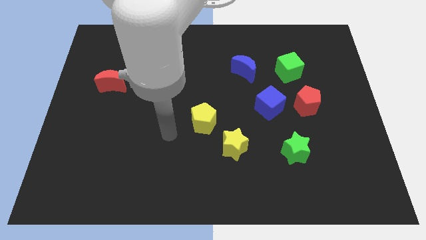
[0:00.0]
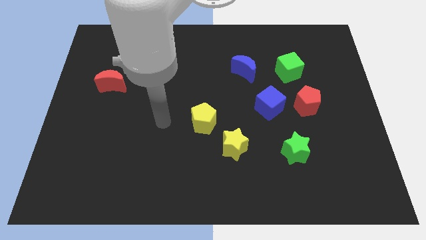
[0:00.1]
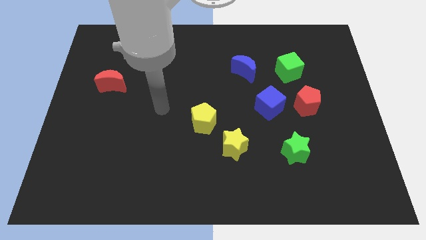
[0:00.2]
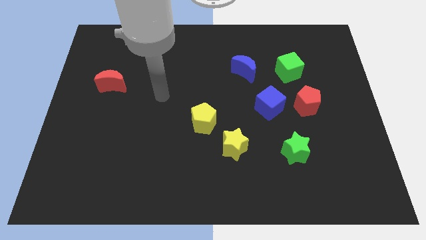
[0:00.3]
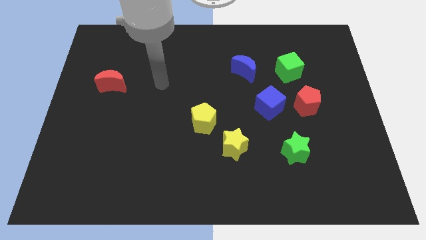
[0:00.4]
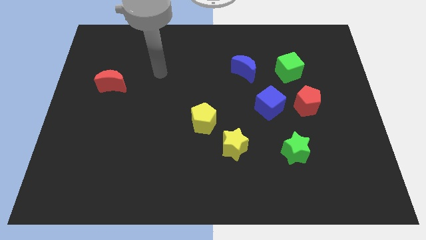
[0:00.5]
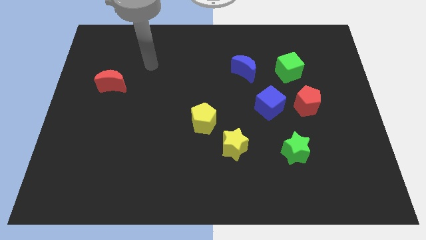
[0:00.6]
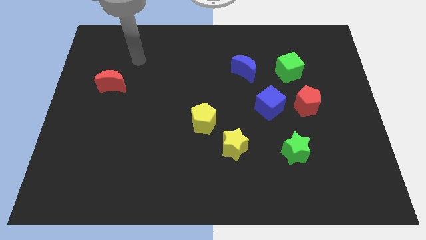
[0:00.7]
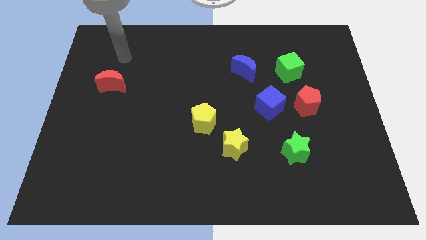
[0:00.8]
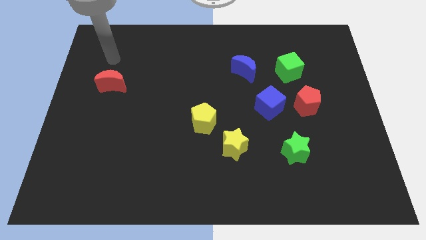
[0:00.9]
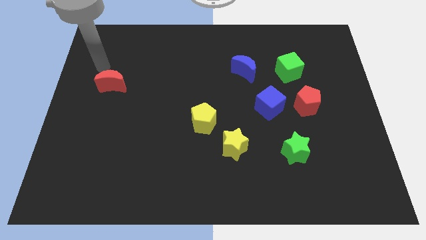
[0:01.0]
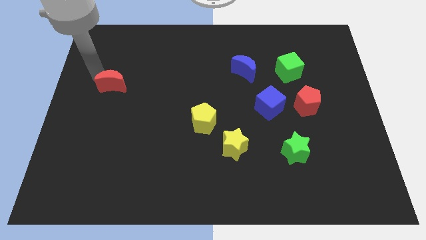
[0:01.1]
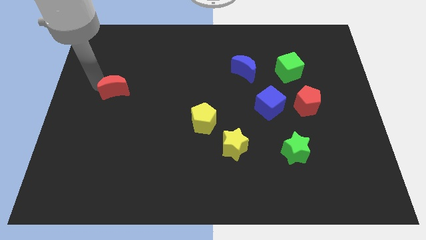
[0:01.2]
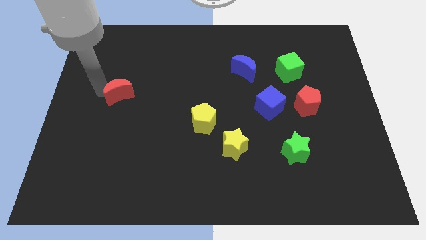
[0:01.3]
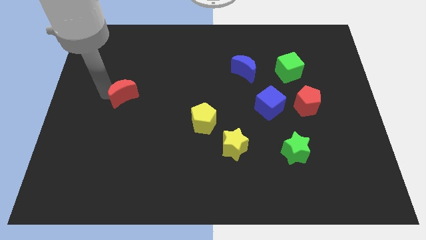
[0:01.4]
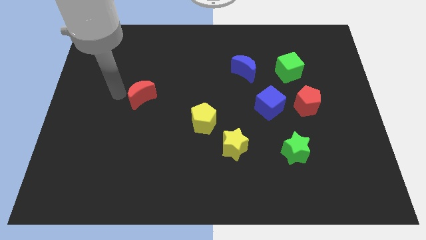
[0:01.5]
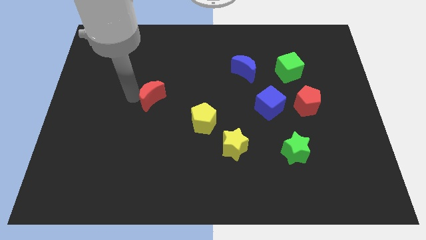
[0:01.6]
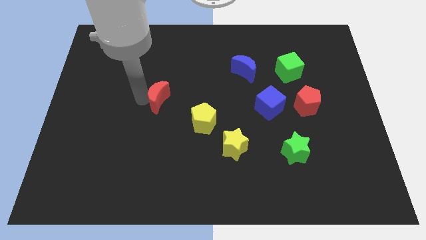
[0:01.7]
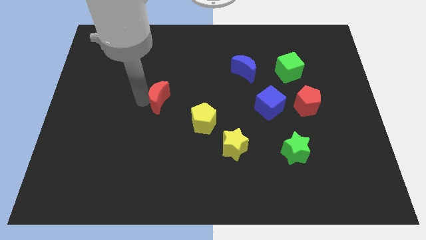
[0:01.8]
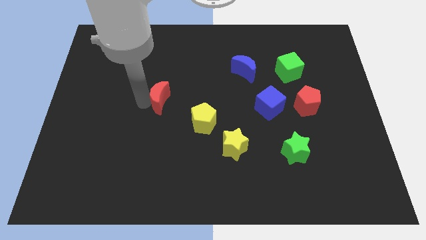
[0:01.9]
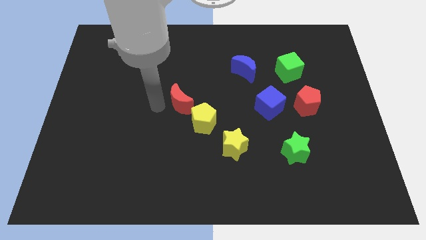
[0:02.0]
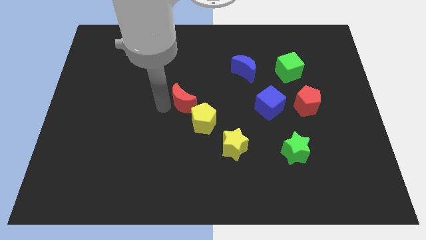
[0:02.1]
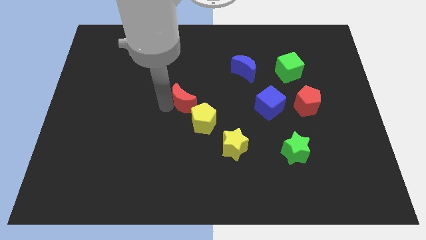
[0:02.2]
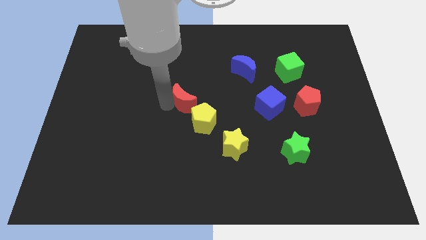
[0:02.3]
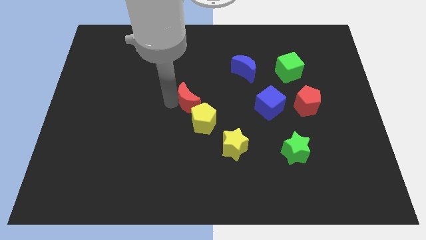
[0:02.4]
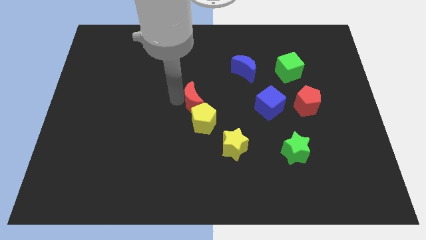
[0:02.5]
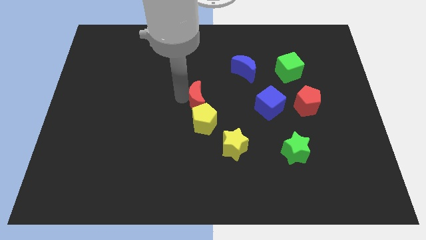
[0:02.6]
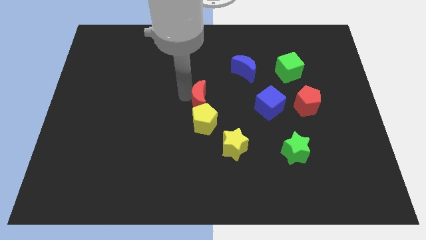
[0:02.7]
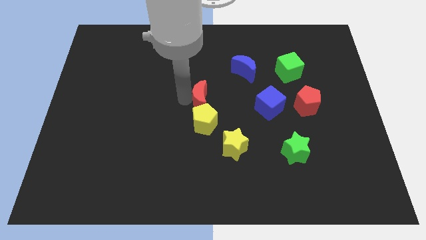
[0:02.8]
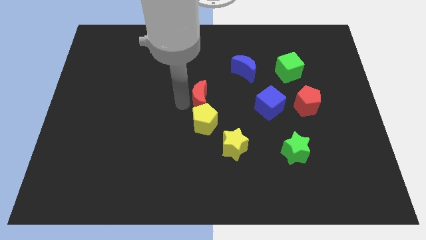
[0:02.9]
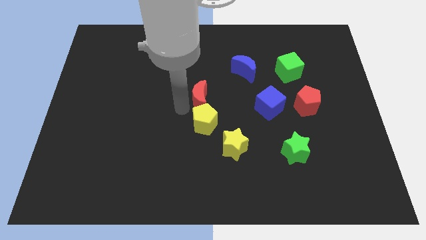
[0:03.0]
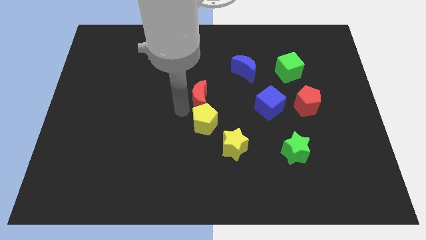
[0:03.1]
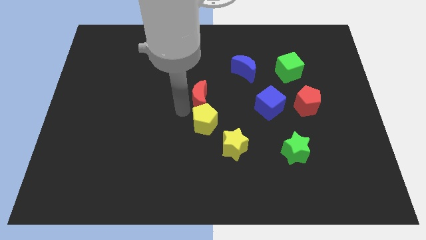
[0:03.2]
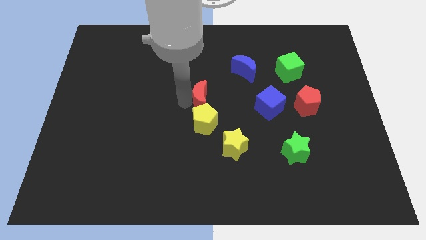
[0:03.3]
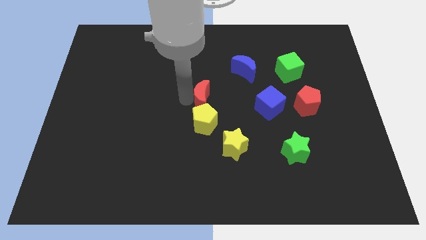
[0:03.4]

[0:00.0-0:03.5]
push red moon above the yellow pentagon

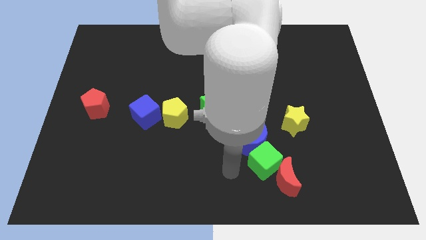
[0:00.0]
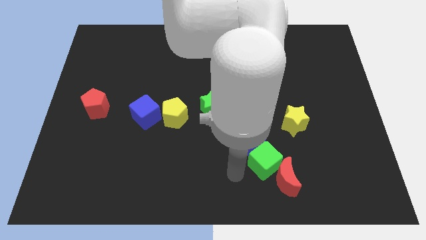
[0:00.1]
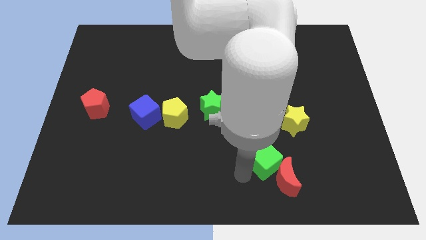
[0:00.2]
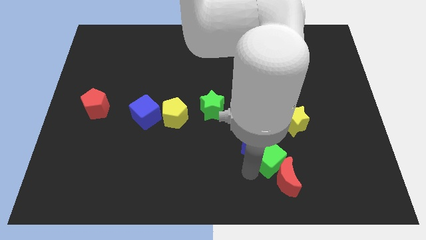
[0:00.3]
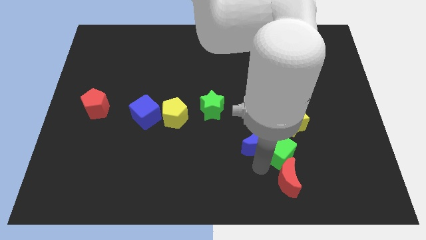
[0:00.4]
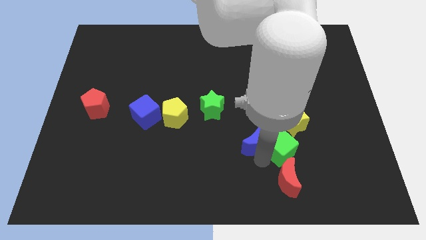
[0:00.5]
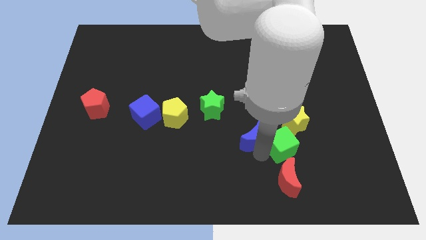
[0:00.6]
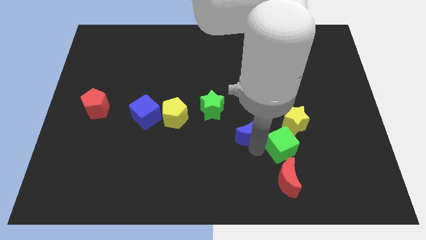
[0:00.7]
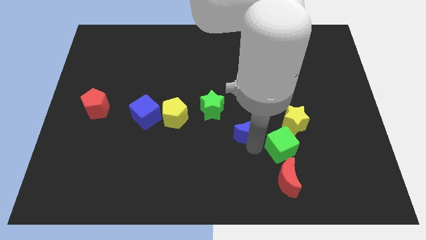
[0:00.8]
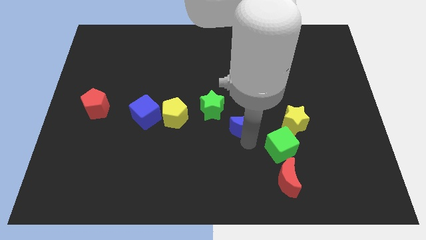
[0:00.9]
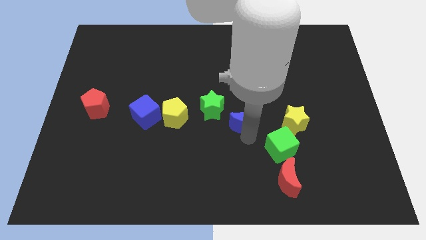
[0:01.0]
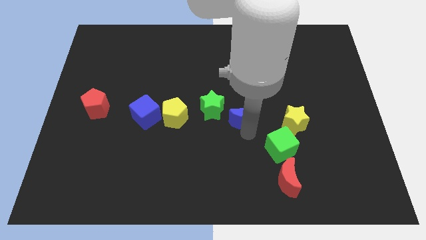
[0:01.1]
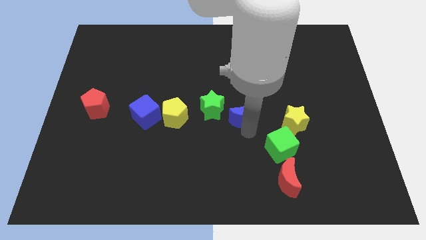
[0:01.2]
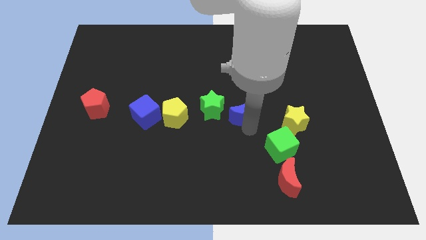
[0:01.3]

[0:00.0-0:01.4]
separate the blue moon from the green cube

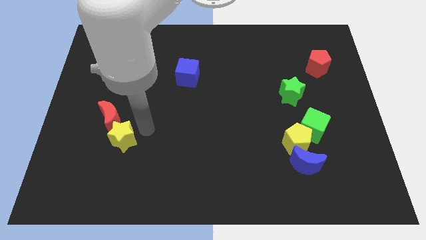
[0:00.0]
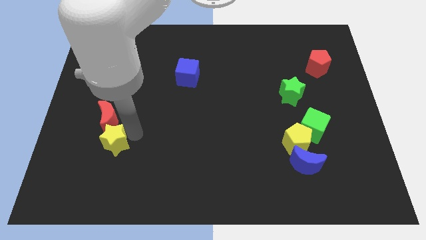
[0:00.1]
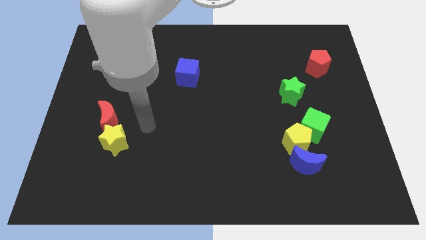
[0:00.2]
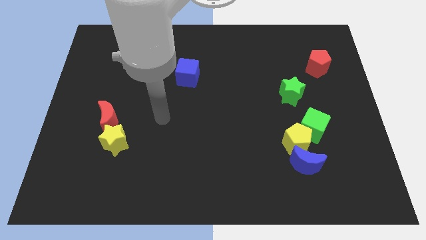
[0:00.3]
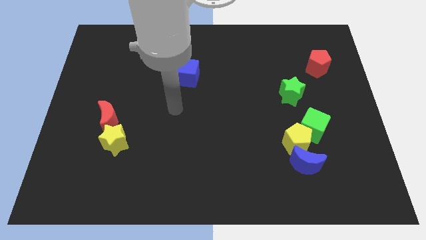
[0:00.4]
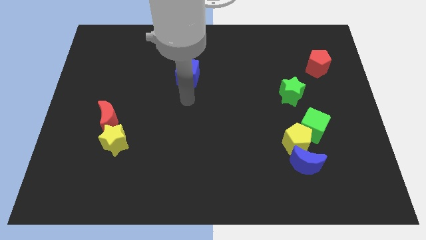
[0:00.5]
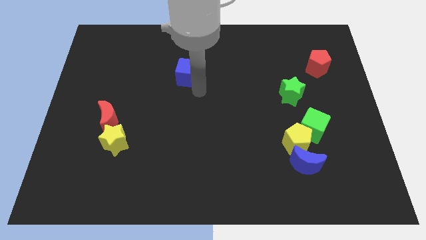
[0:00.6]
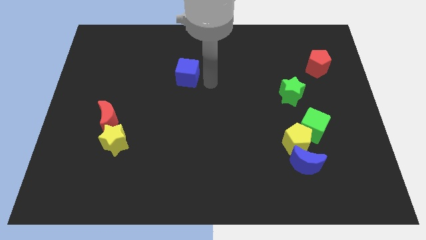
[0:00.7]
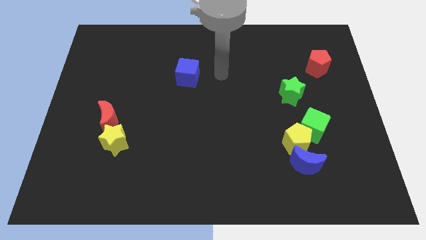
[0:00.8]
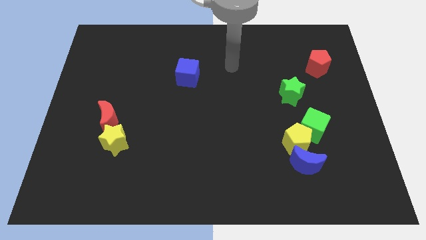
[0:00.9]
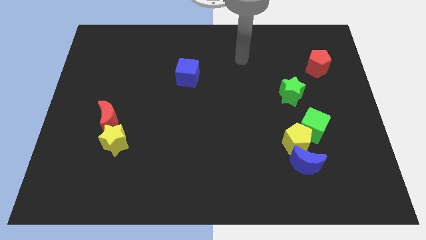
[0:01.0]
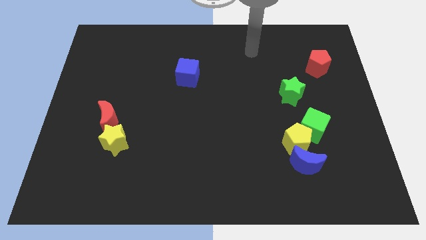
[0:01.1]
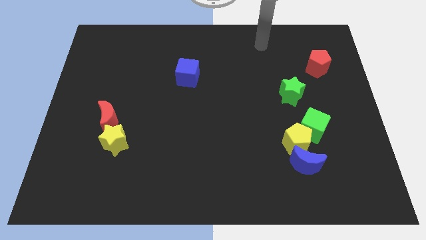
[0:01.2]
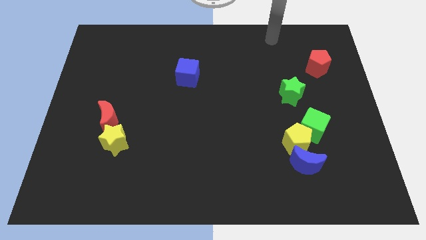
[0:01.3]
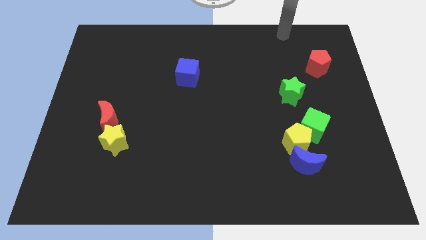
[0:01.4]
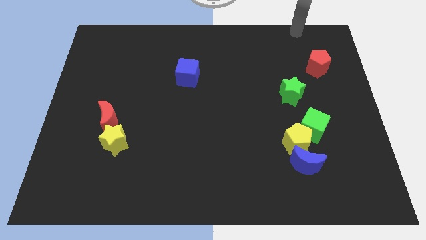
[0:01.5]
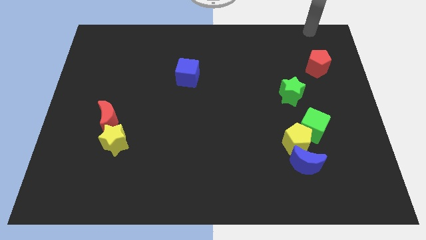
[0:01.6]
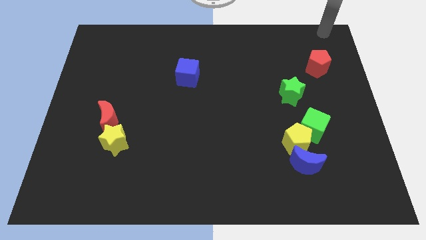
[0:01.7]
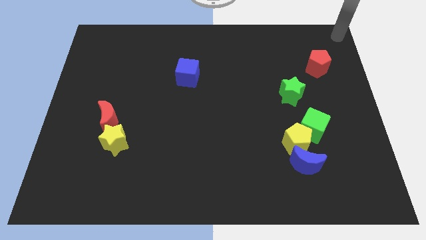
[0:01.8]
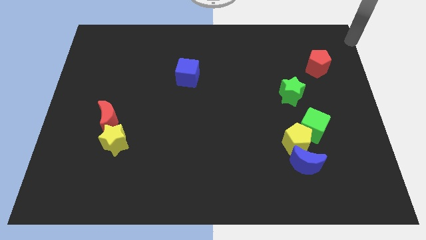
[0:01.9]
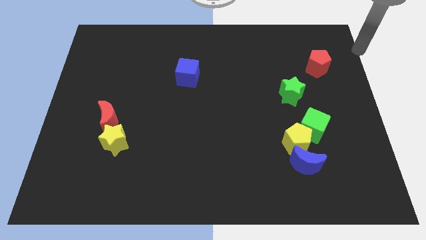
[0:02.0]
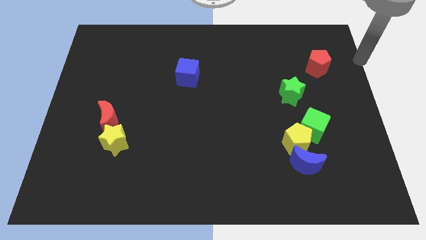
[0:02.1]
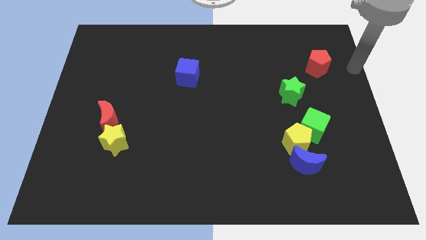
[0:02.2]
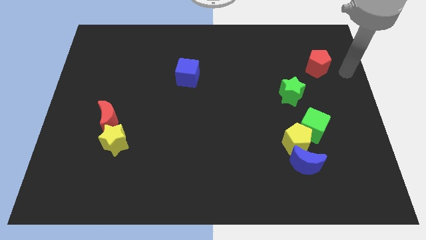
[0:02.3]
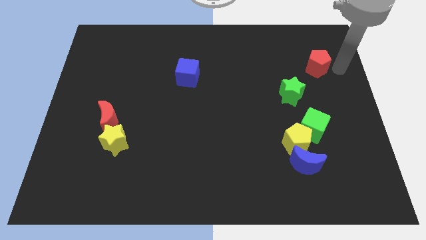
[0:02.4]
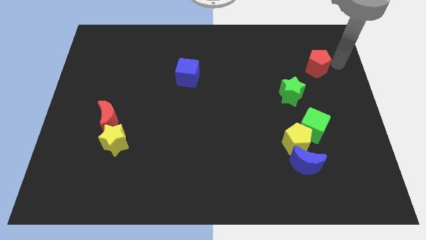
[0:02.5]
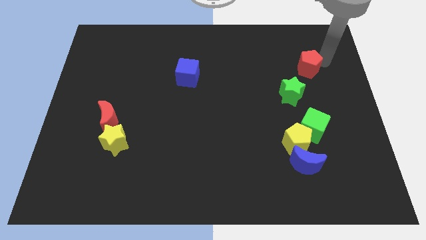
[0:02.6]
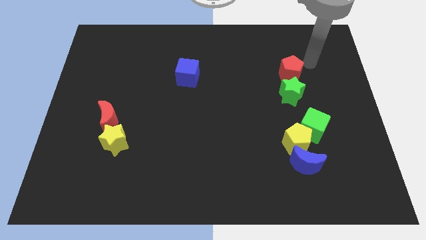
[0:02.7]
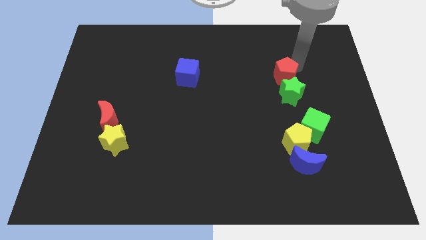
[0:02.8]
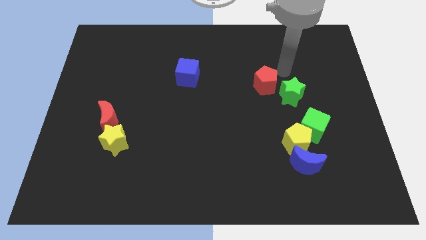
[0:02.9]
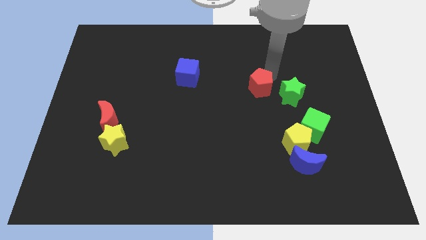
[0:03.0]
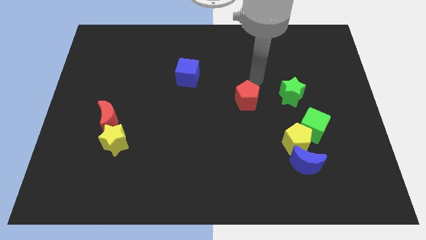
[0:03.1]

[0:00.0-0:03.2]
put the red pentagon left to the green star

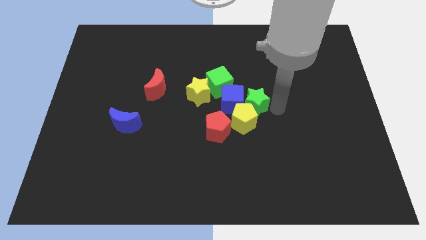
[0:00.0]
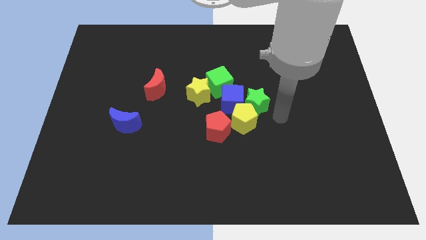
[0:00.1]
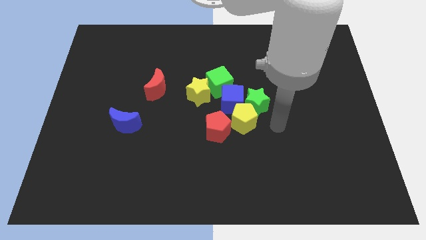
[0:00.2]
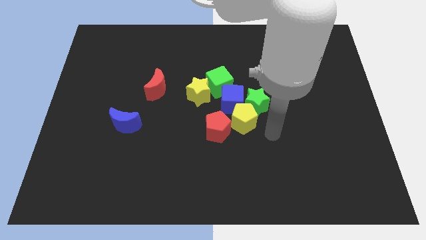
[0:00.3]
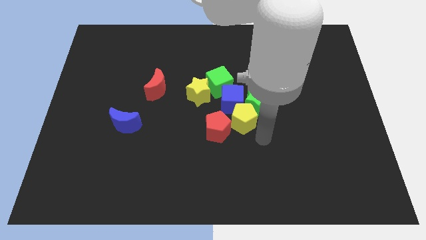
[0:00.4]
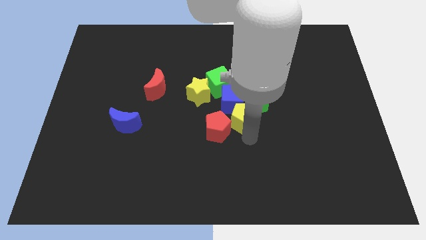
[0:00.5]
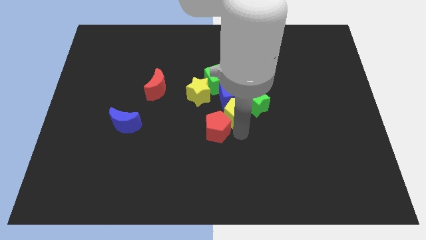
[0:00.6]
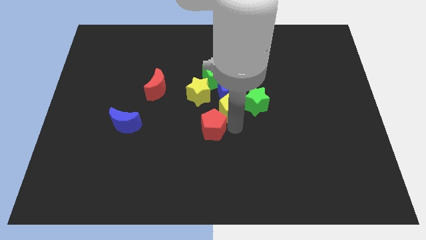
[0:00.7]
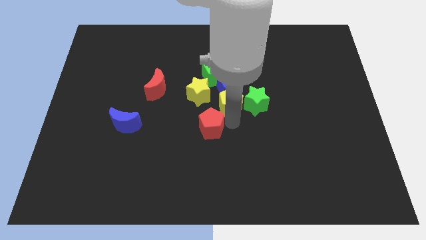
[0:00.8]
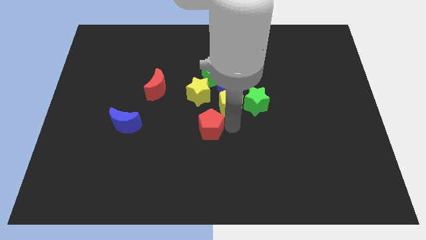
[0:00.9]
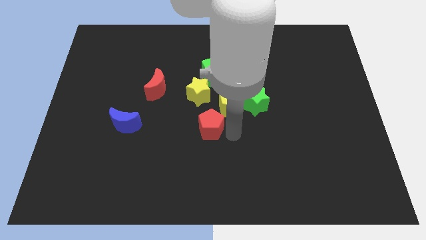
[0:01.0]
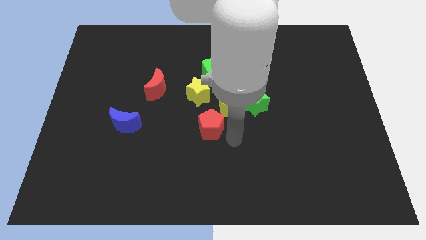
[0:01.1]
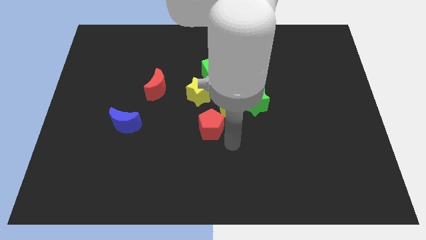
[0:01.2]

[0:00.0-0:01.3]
push the yellow pentagon into the blue cube
